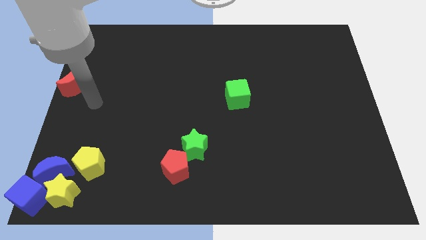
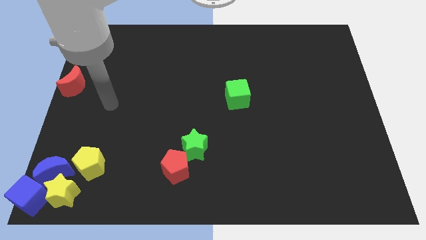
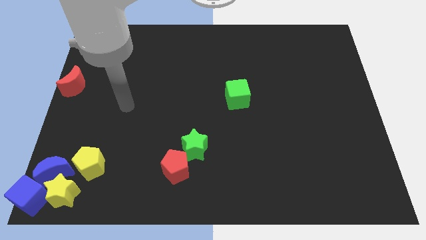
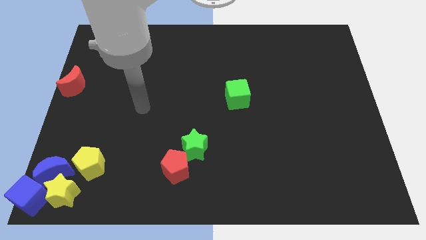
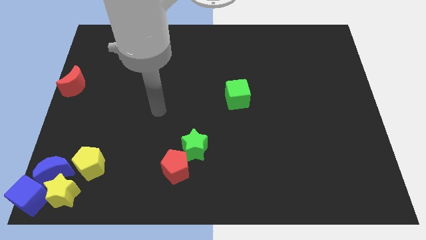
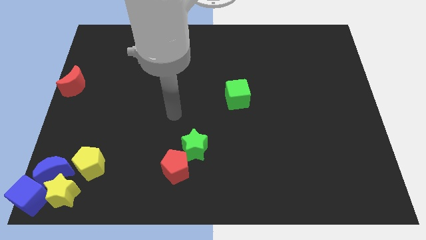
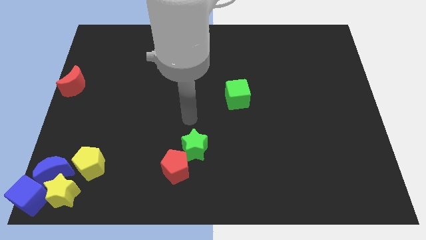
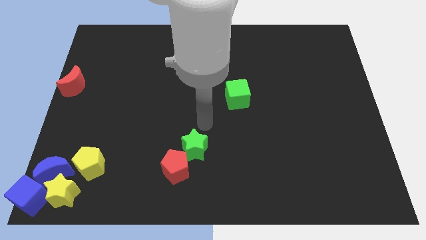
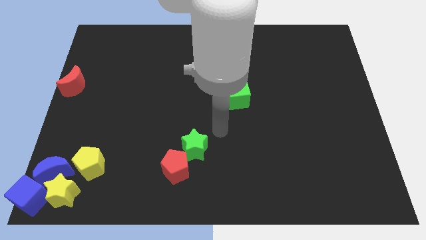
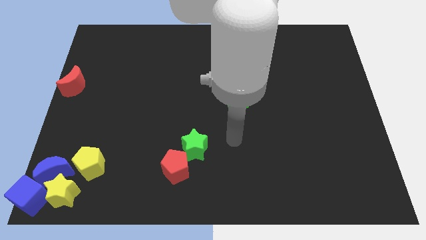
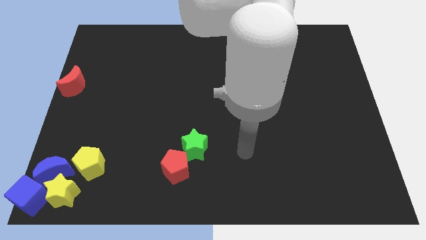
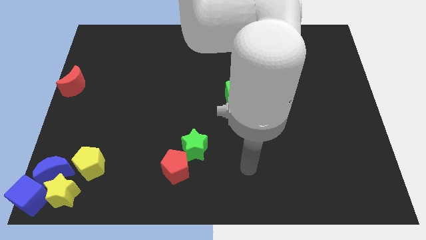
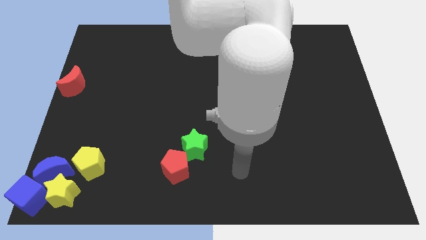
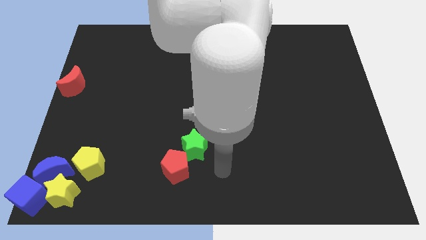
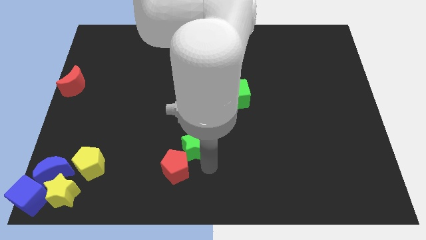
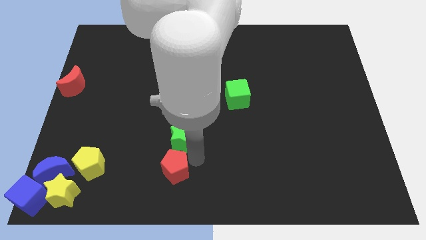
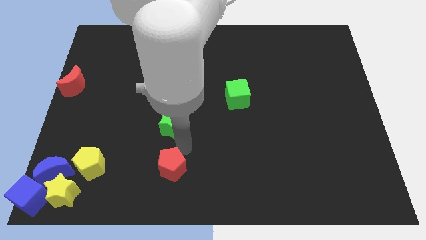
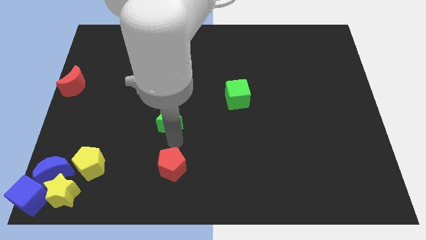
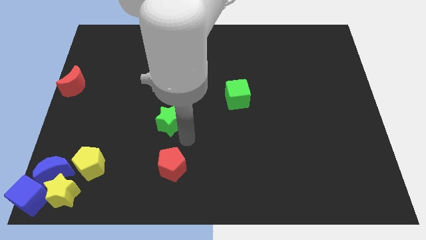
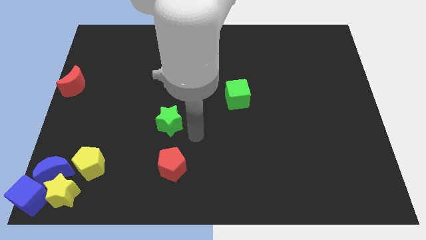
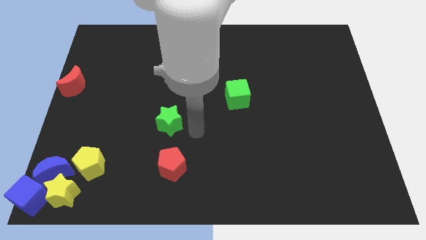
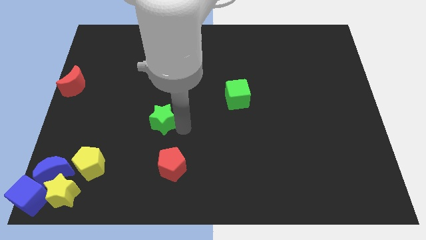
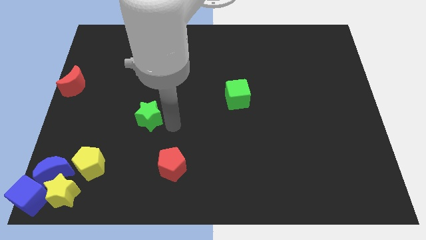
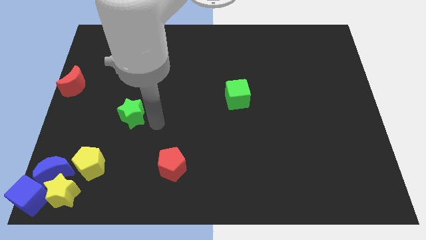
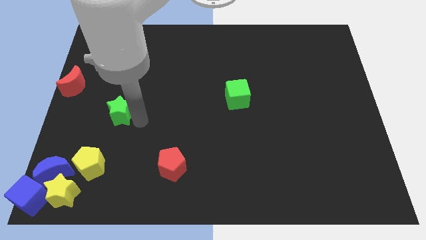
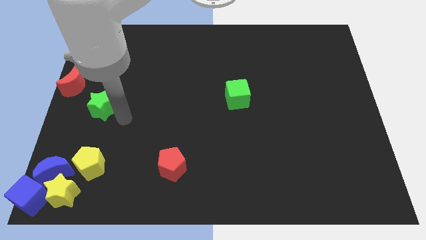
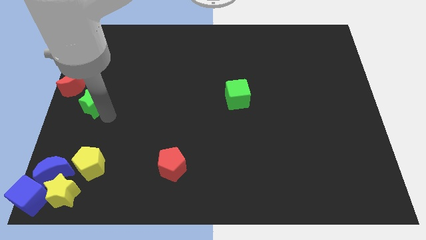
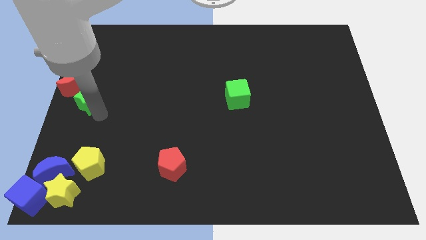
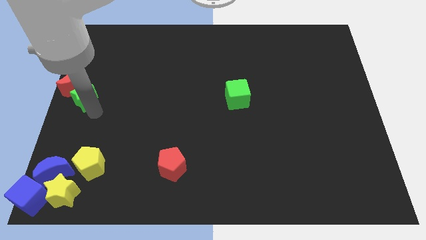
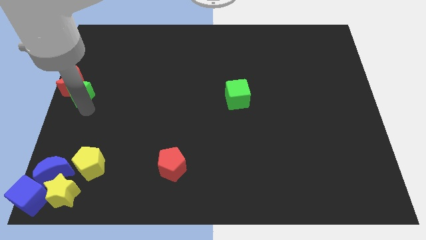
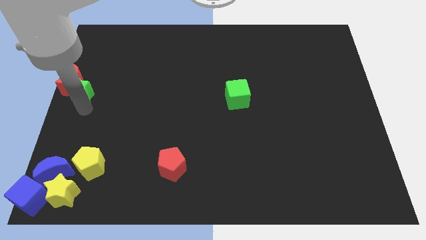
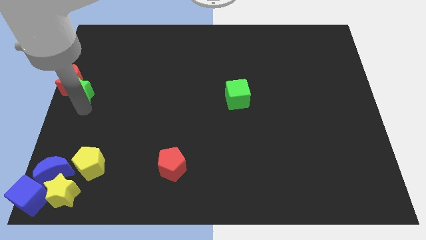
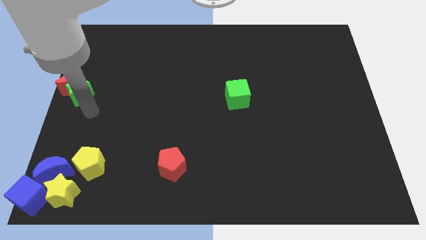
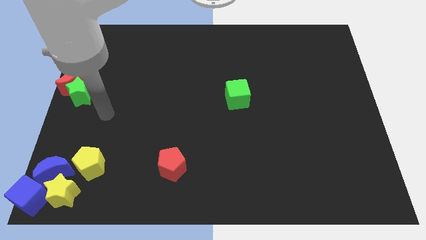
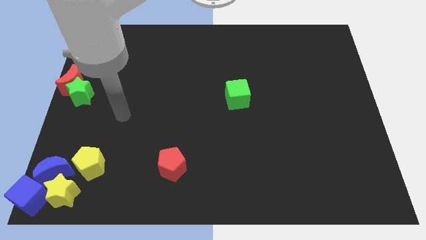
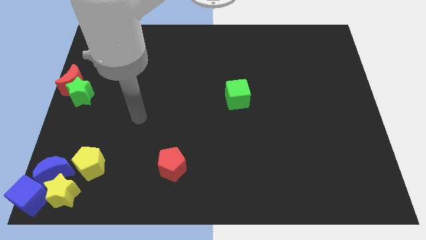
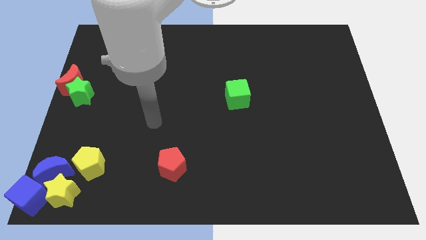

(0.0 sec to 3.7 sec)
push the green star to the right of the red crescent

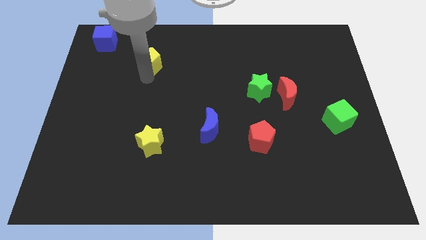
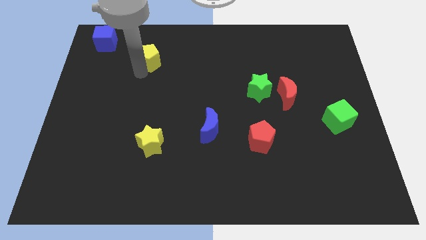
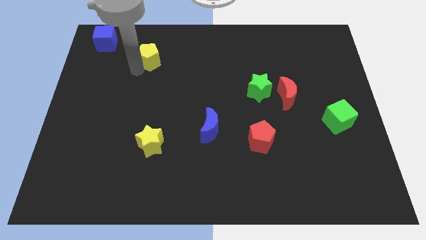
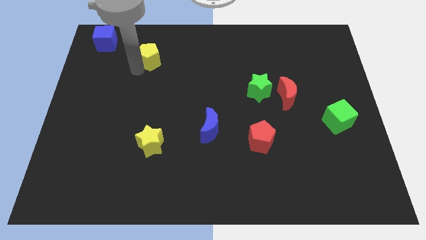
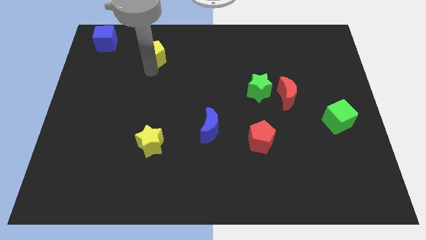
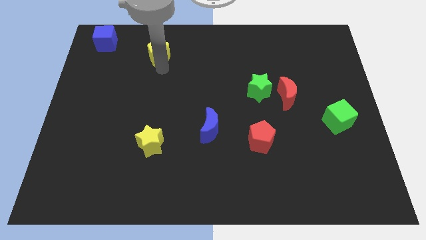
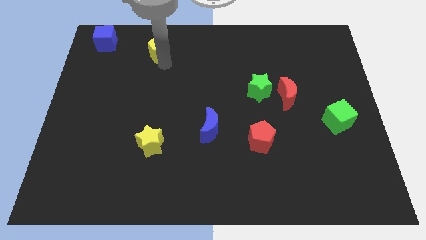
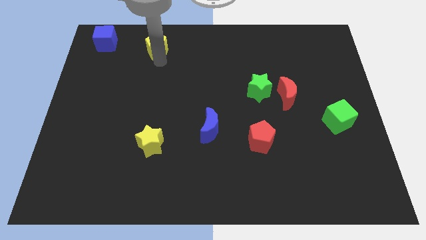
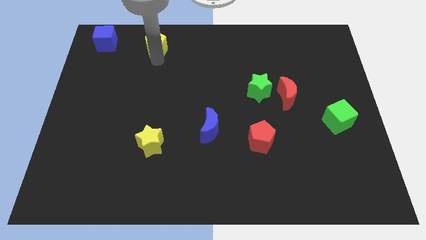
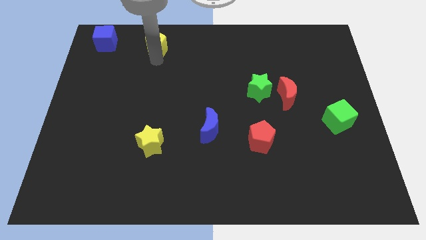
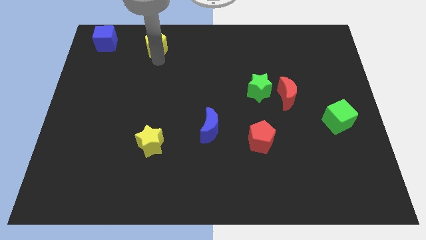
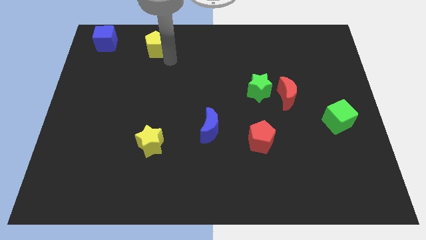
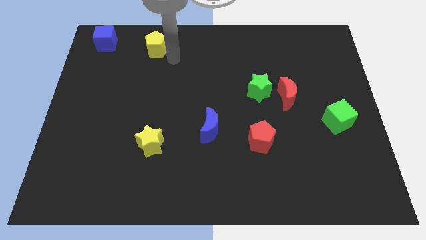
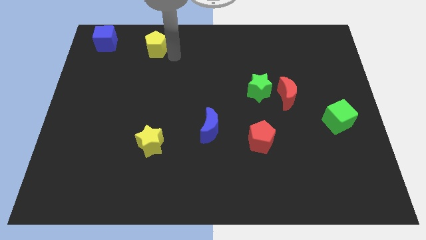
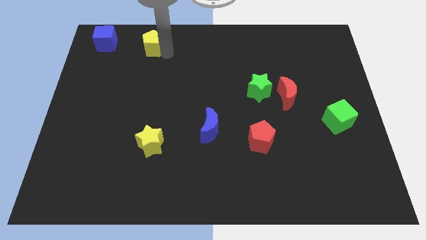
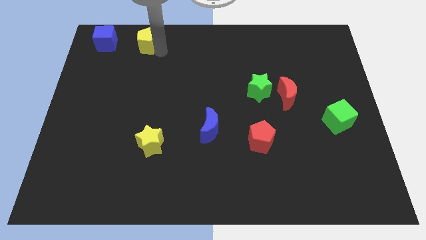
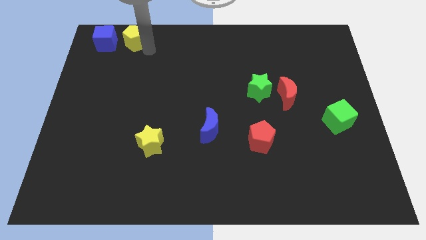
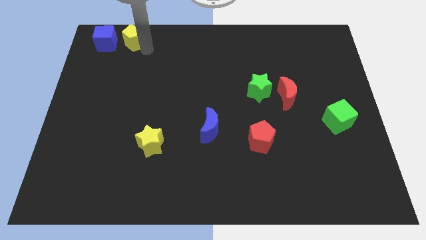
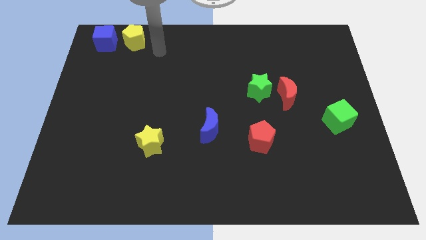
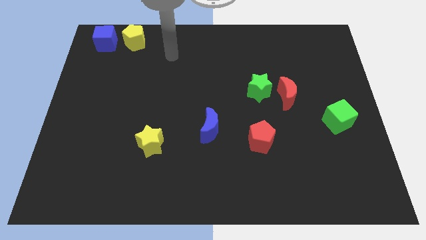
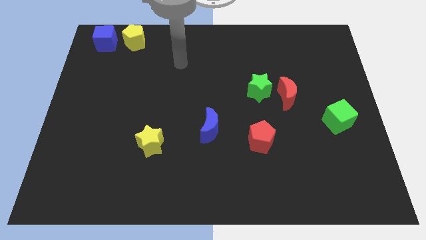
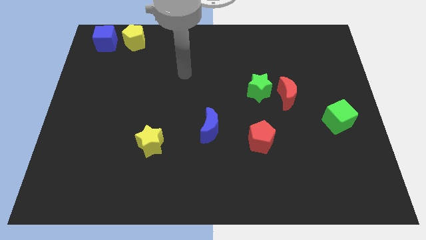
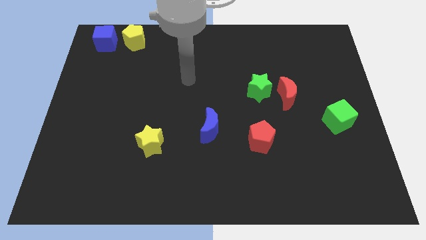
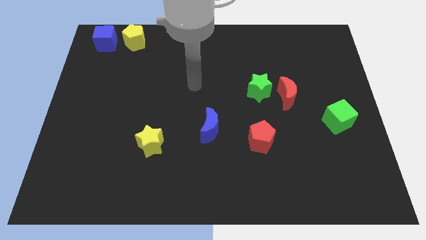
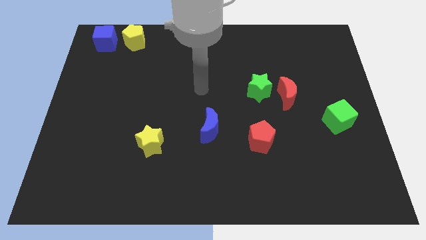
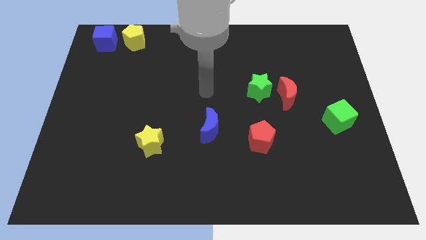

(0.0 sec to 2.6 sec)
place the yellow pentagon to the right side of the blue cube

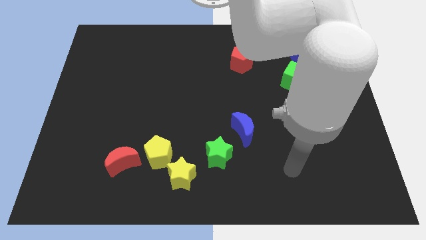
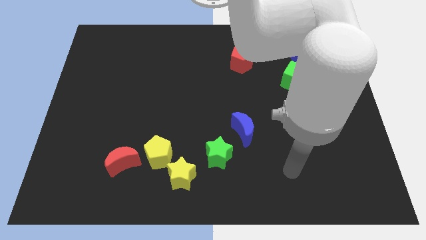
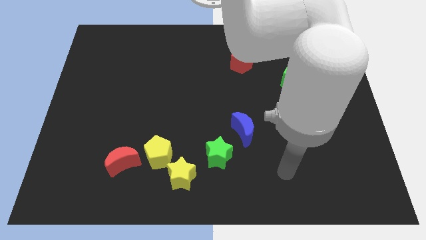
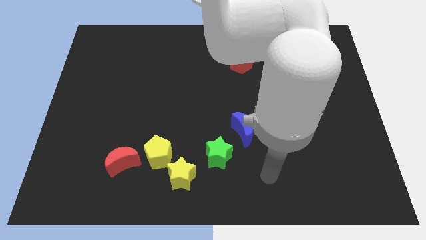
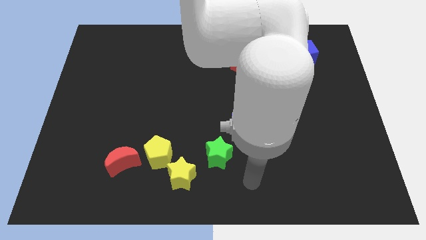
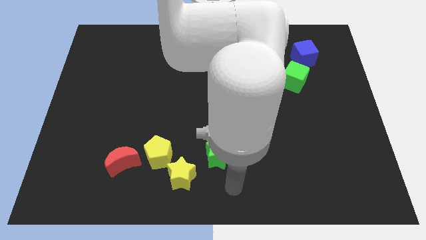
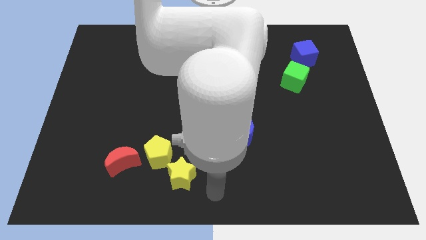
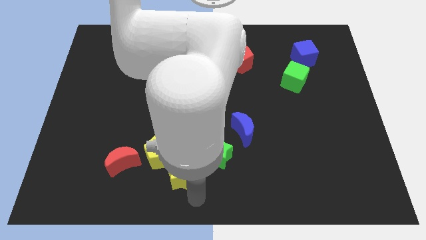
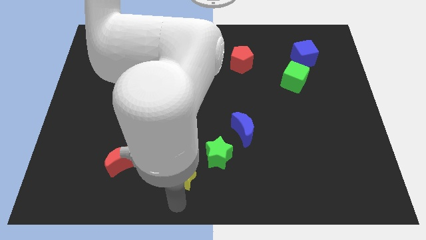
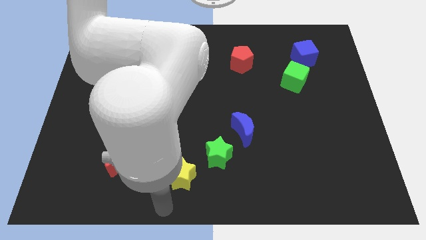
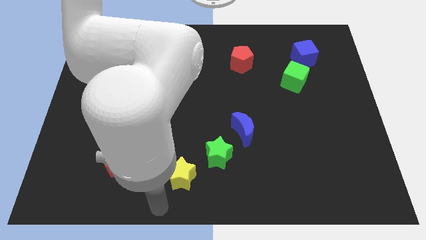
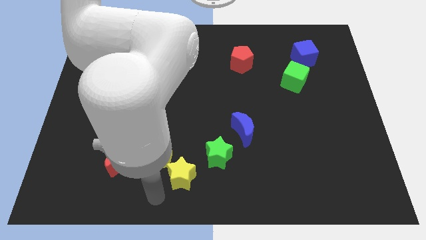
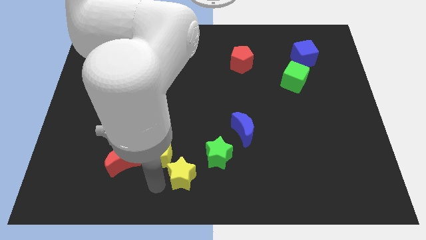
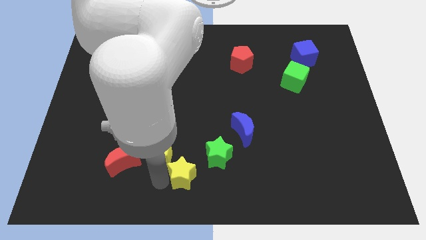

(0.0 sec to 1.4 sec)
point your arm at the left of the yellow star

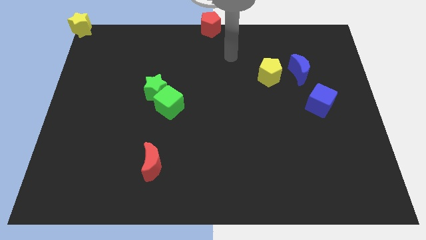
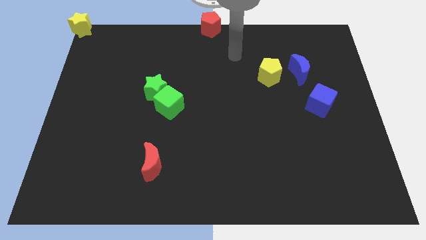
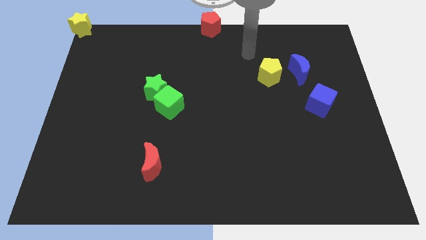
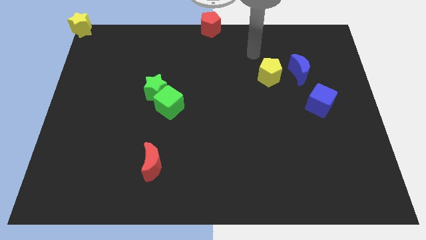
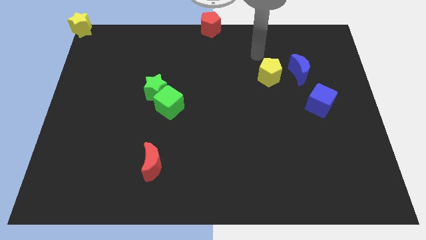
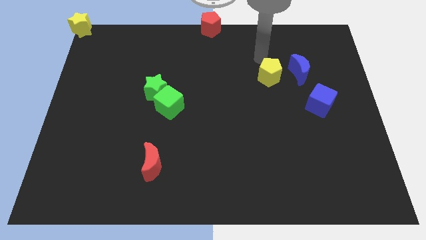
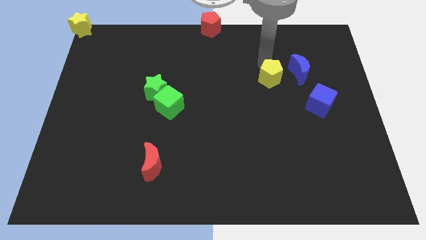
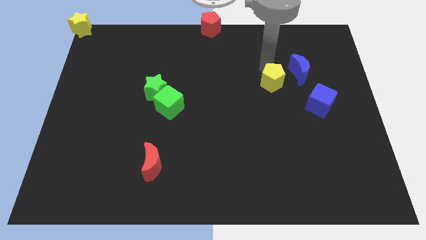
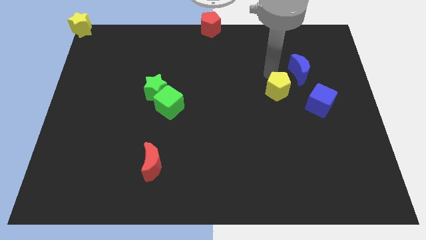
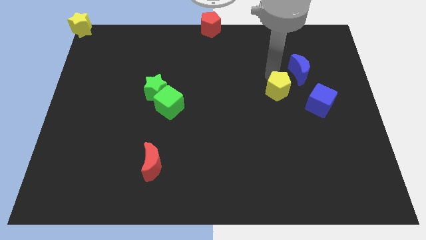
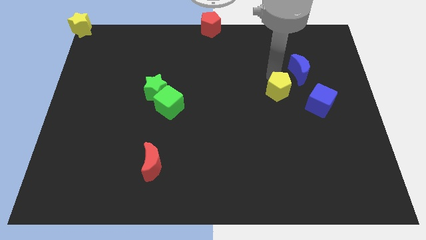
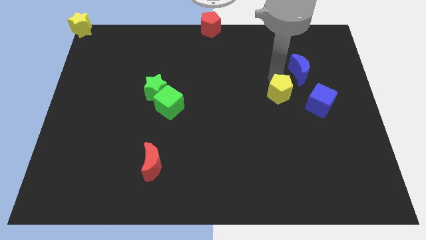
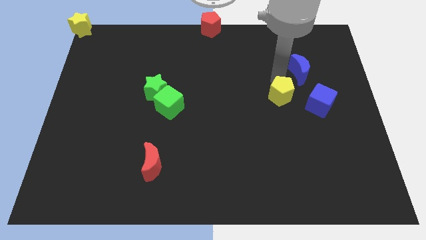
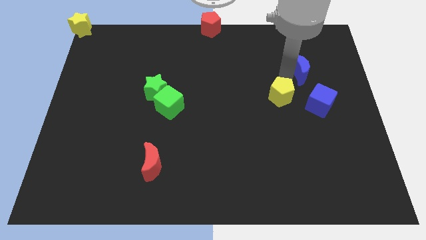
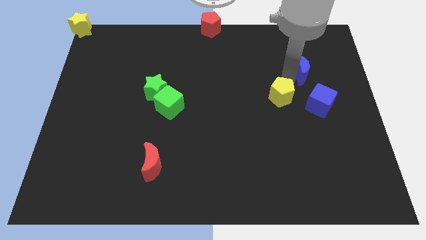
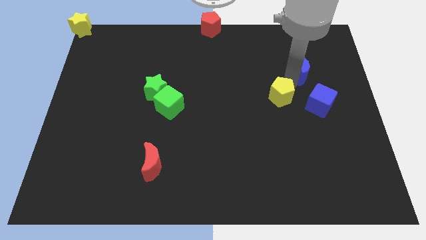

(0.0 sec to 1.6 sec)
move the yellow pentagon to the left side of the blue cube
